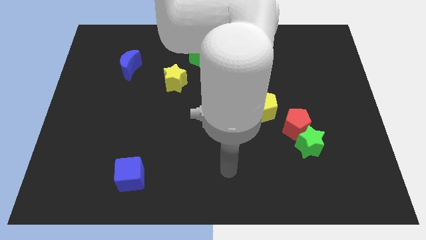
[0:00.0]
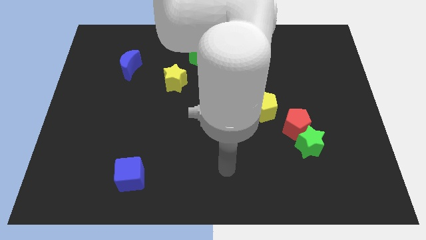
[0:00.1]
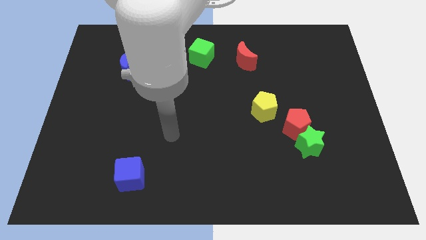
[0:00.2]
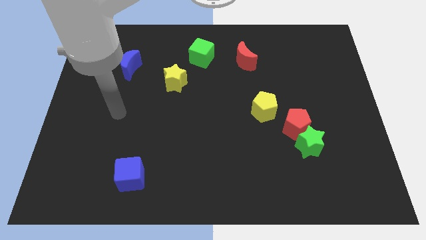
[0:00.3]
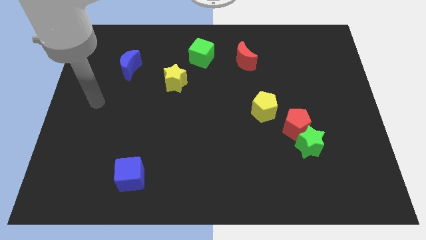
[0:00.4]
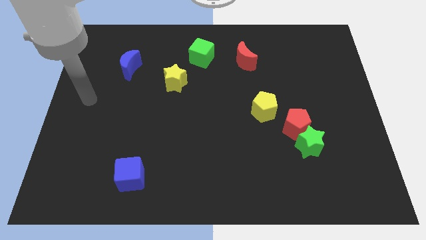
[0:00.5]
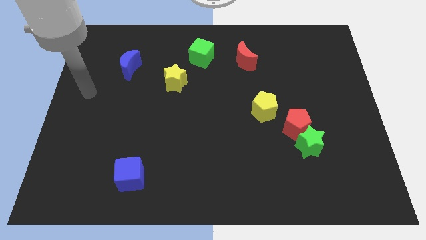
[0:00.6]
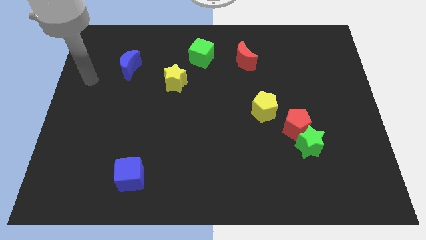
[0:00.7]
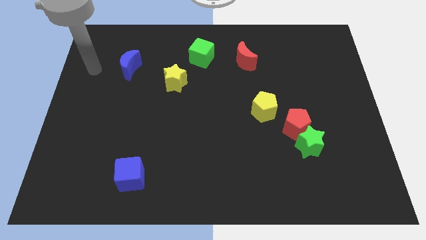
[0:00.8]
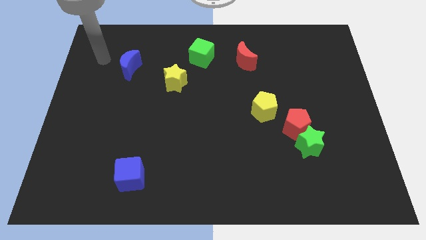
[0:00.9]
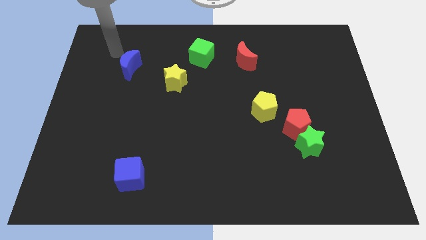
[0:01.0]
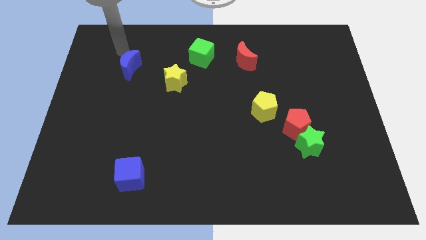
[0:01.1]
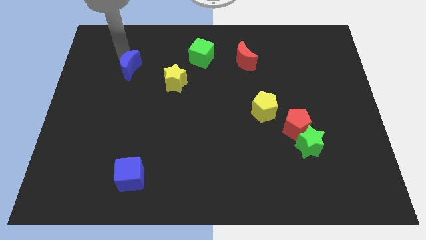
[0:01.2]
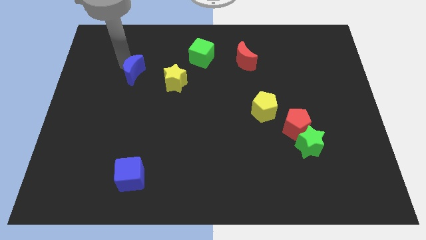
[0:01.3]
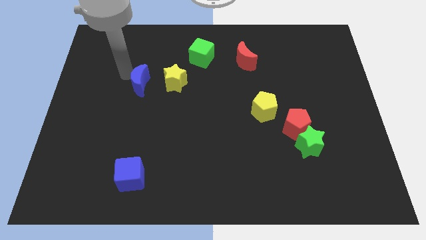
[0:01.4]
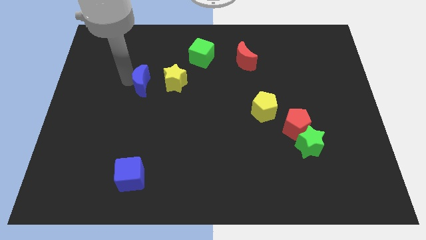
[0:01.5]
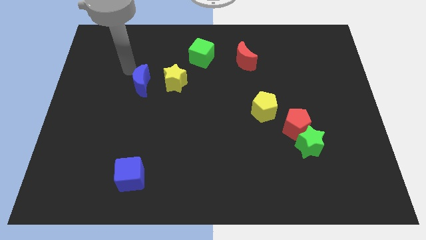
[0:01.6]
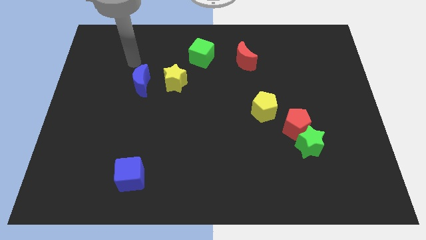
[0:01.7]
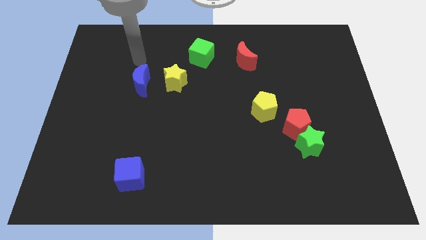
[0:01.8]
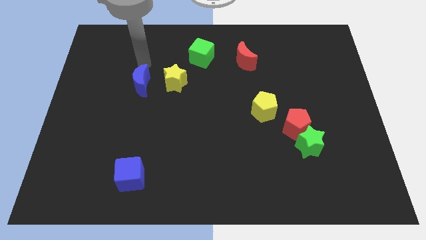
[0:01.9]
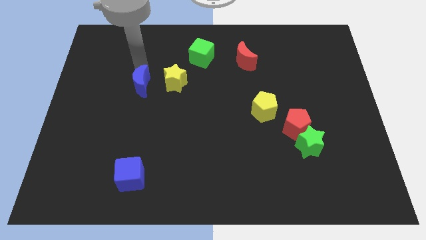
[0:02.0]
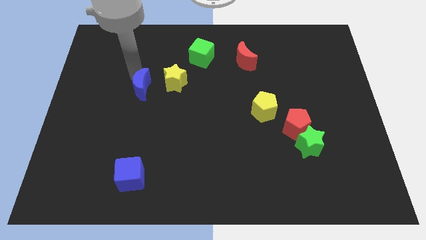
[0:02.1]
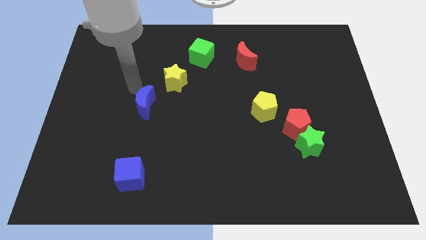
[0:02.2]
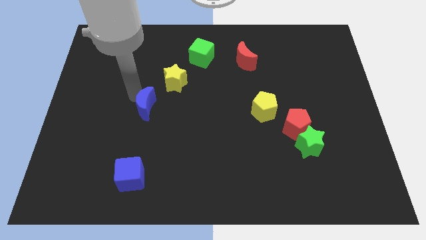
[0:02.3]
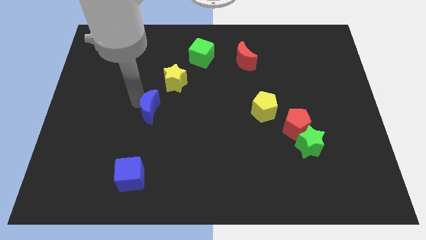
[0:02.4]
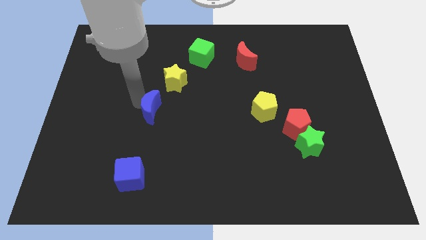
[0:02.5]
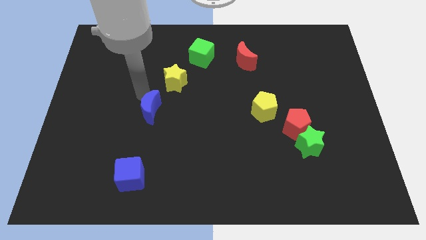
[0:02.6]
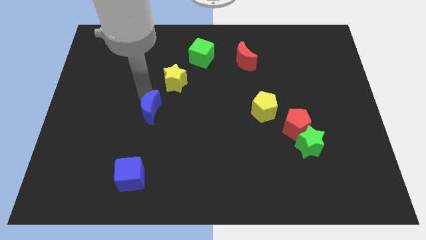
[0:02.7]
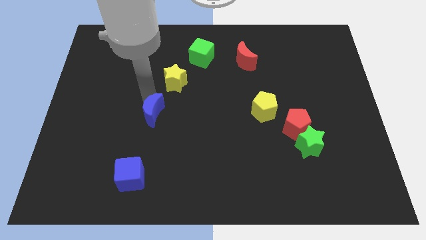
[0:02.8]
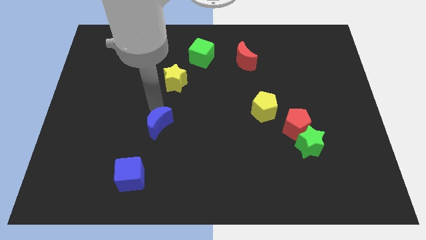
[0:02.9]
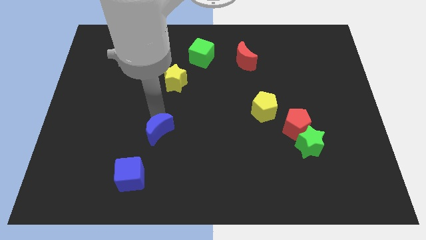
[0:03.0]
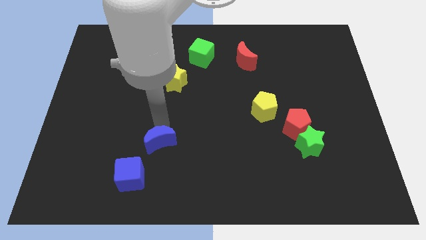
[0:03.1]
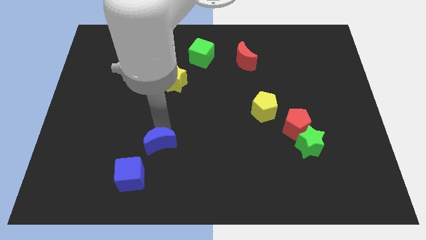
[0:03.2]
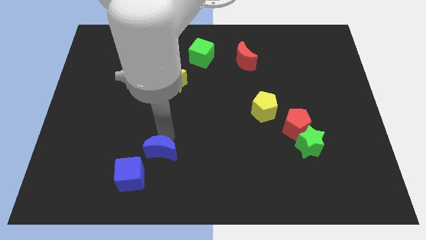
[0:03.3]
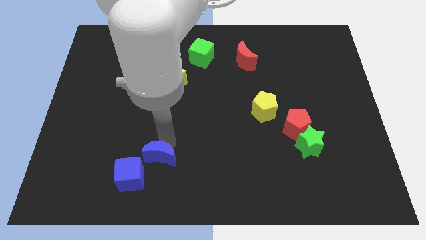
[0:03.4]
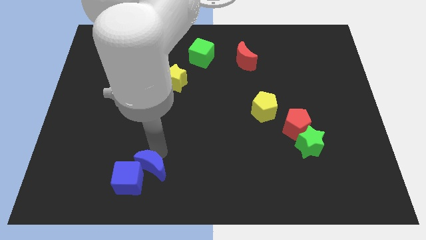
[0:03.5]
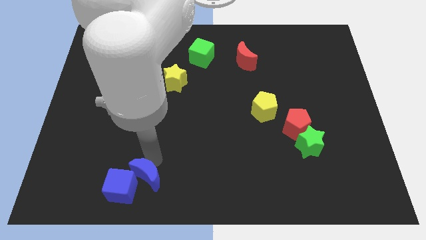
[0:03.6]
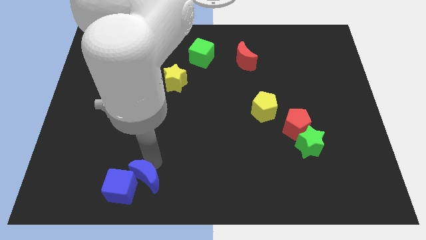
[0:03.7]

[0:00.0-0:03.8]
put the blue moon towards the blue cube

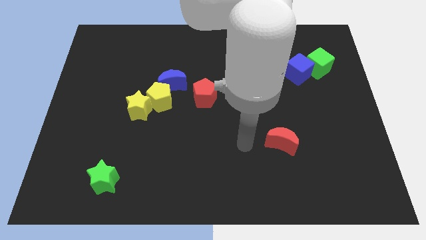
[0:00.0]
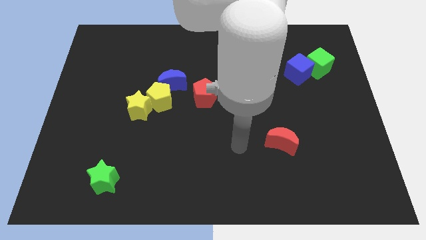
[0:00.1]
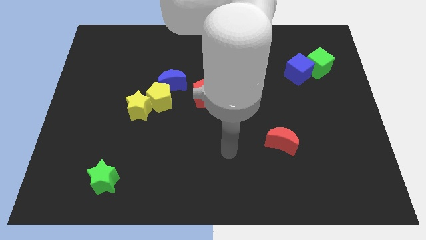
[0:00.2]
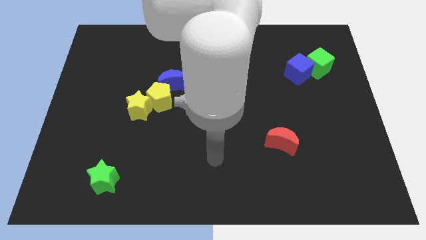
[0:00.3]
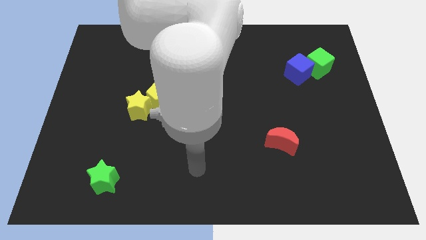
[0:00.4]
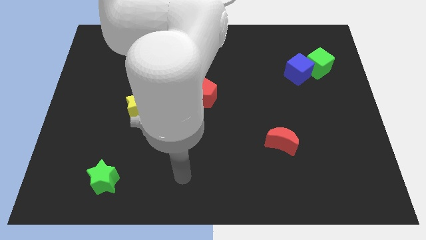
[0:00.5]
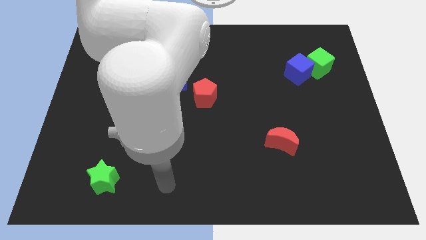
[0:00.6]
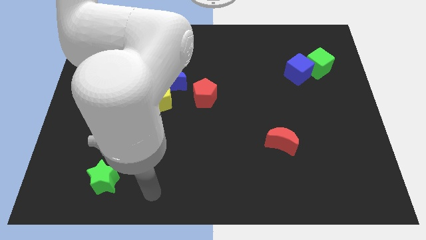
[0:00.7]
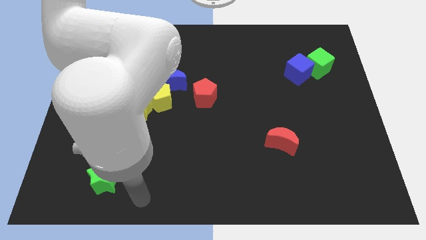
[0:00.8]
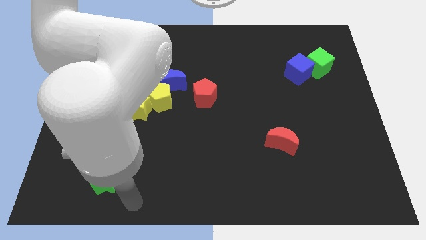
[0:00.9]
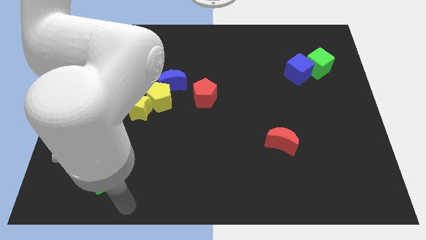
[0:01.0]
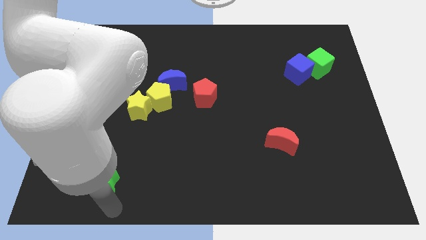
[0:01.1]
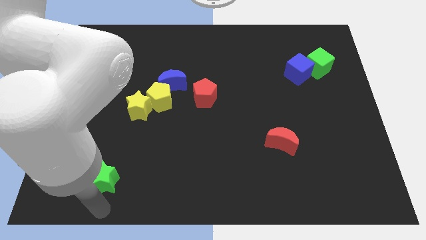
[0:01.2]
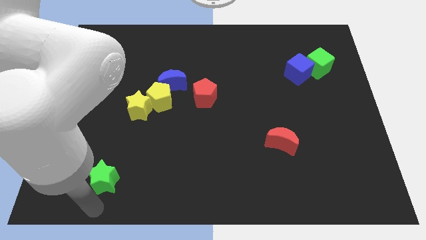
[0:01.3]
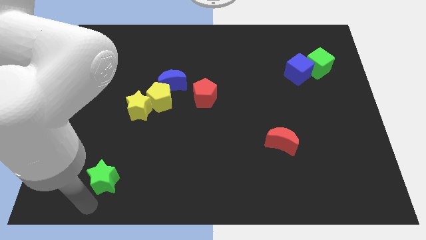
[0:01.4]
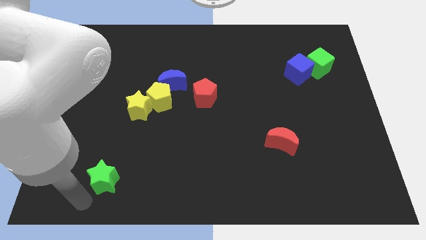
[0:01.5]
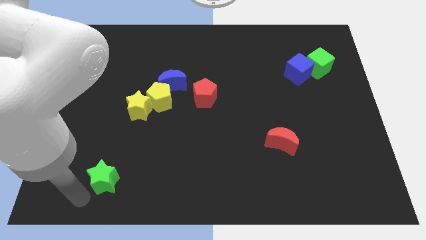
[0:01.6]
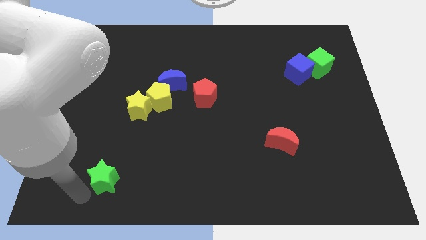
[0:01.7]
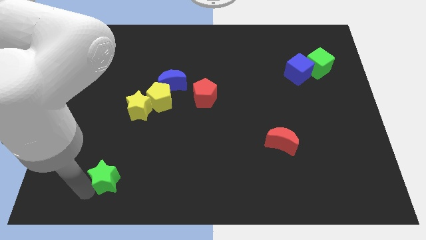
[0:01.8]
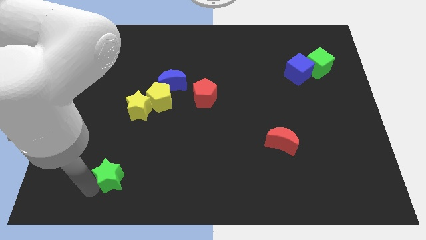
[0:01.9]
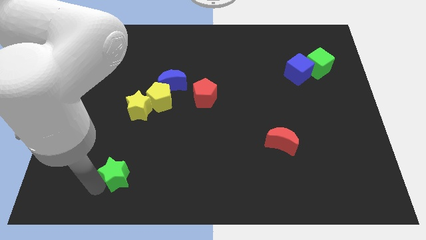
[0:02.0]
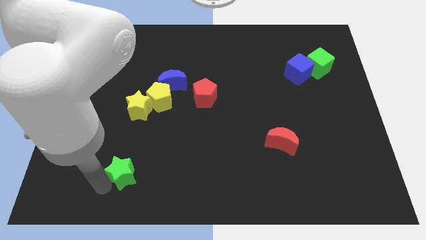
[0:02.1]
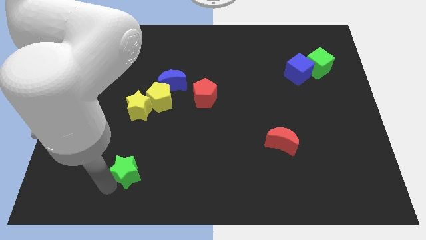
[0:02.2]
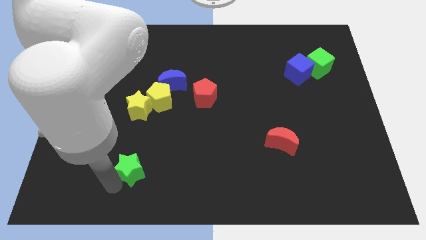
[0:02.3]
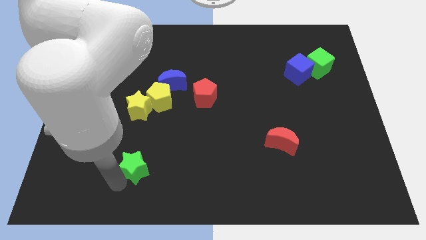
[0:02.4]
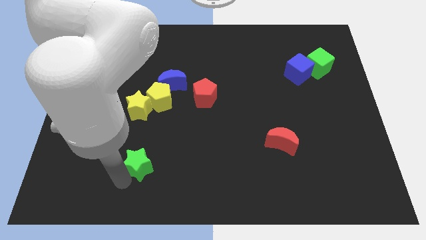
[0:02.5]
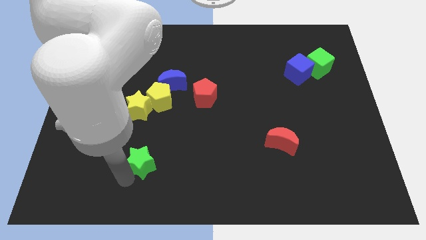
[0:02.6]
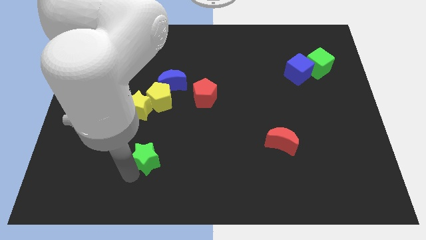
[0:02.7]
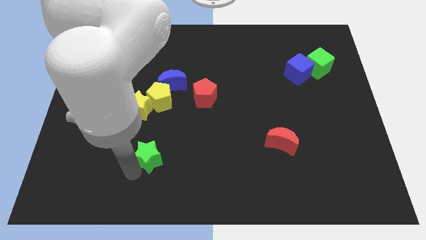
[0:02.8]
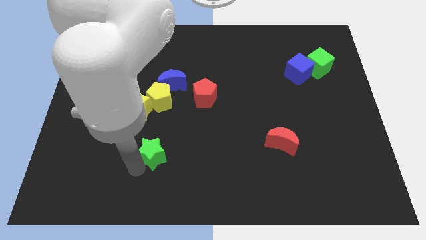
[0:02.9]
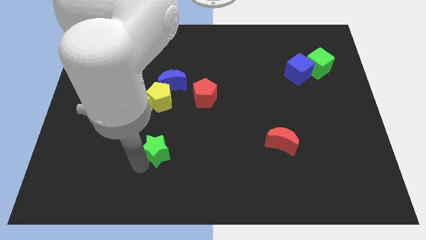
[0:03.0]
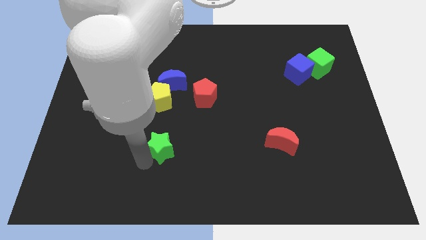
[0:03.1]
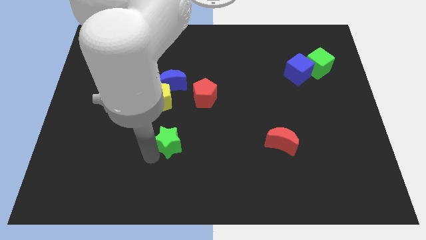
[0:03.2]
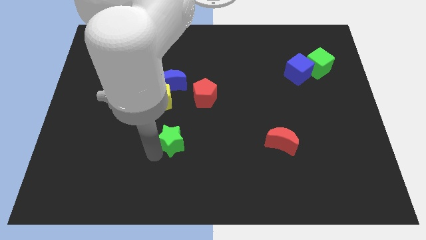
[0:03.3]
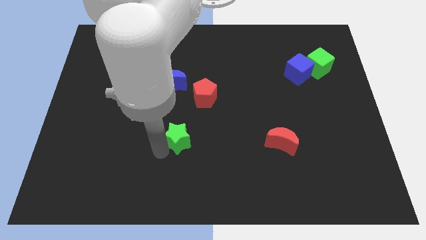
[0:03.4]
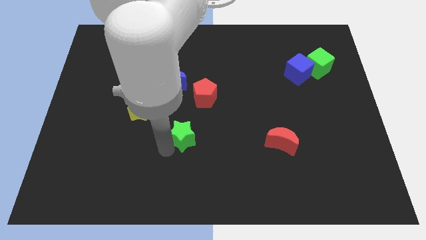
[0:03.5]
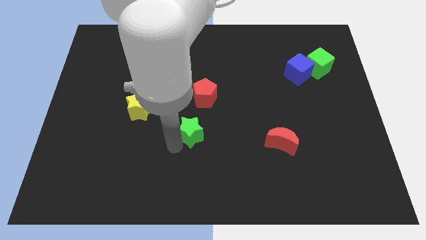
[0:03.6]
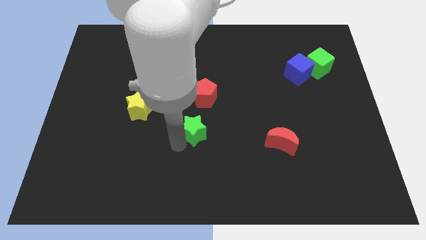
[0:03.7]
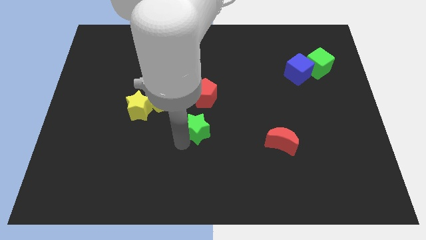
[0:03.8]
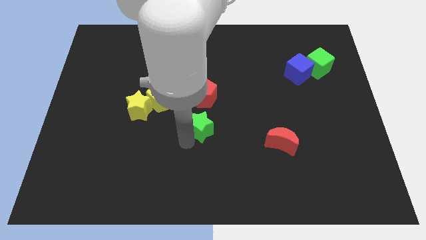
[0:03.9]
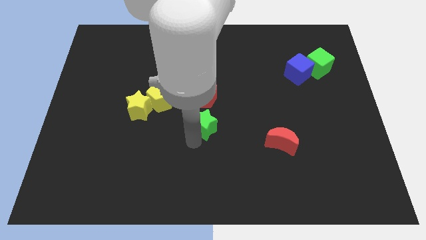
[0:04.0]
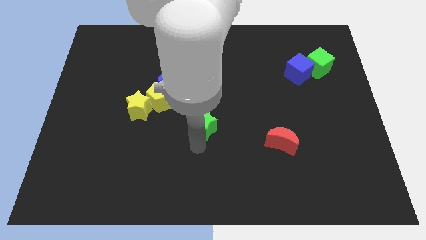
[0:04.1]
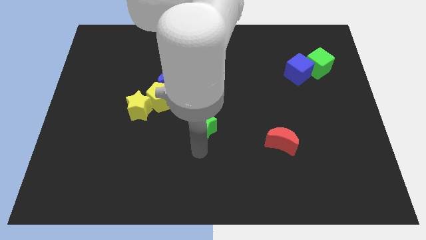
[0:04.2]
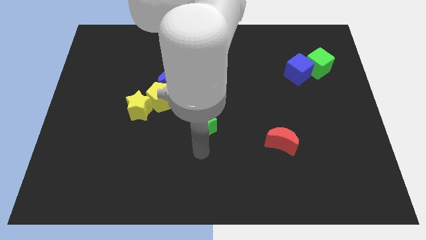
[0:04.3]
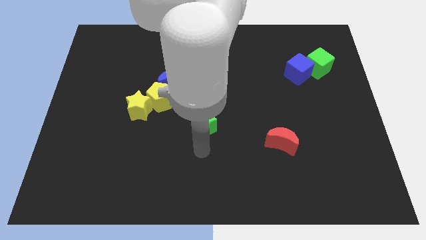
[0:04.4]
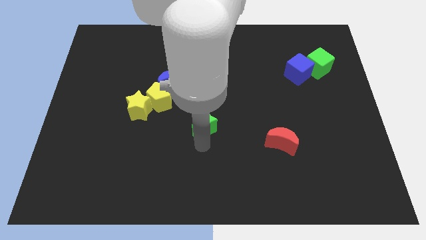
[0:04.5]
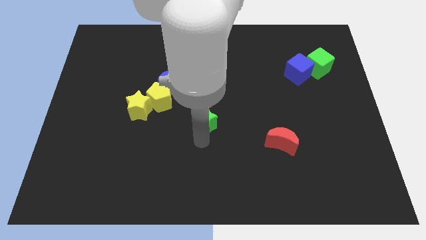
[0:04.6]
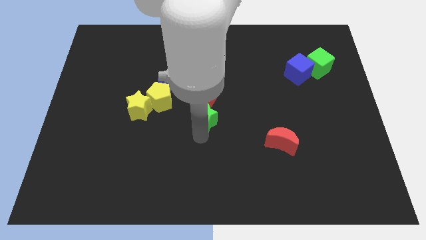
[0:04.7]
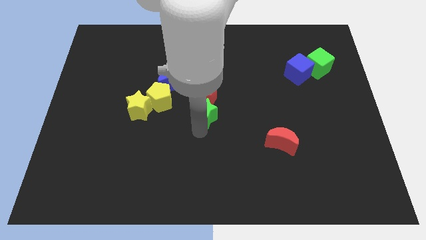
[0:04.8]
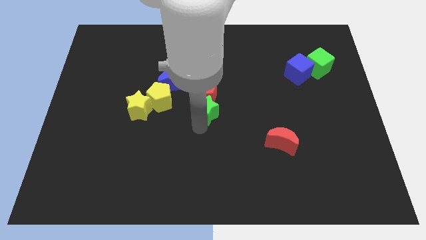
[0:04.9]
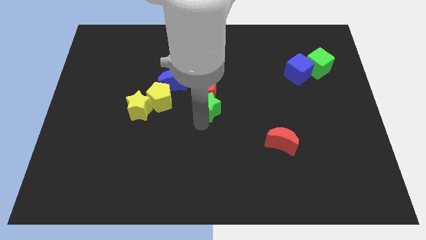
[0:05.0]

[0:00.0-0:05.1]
put the green star towards the red pentagon
